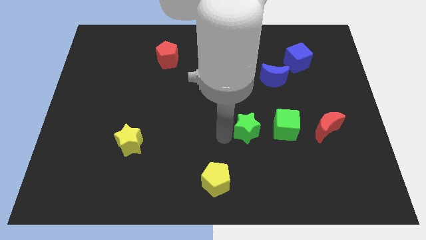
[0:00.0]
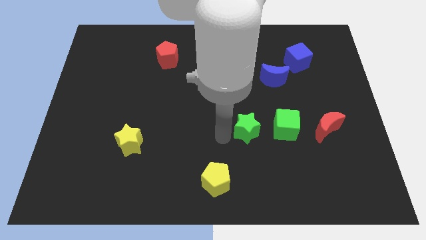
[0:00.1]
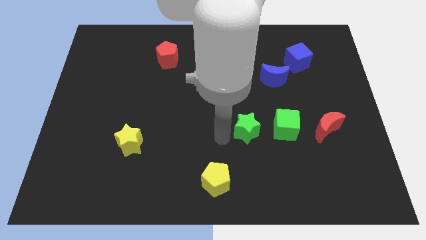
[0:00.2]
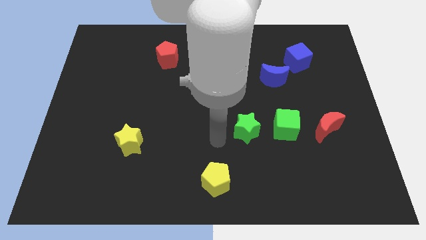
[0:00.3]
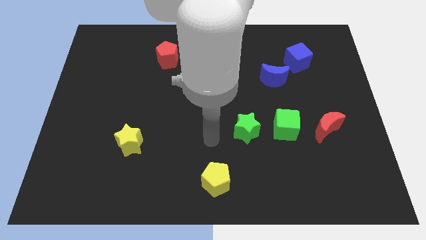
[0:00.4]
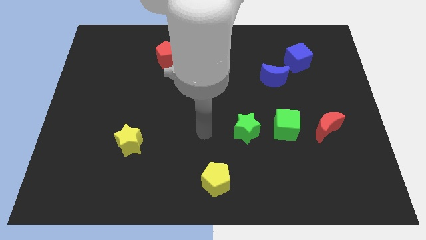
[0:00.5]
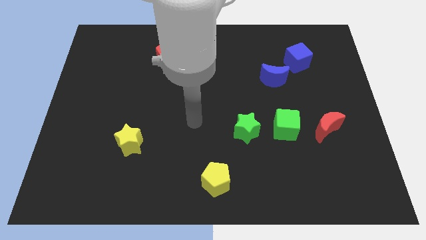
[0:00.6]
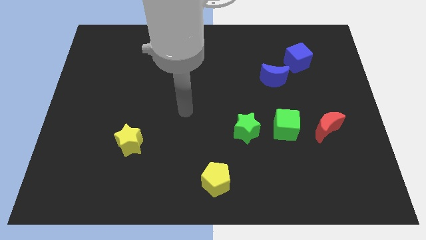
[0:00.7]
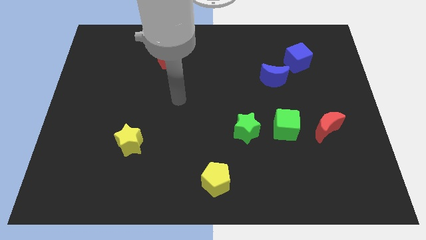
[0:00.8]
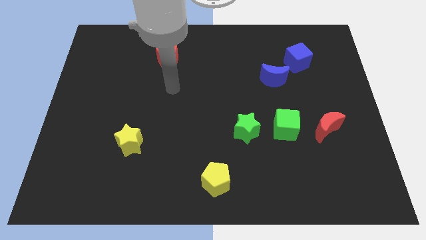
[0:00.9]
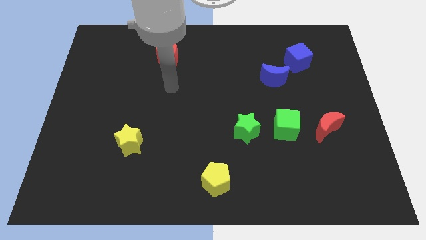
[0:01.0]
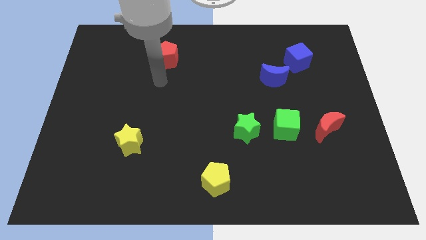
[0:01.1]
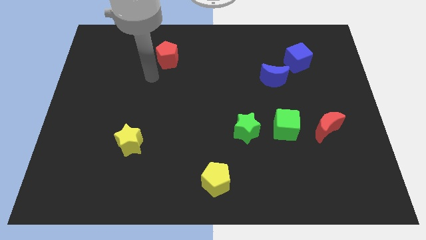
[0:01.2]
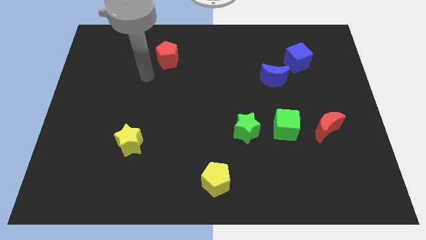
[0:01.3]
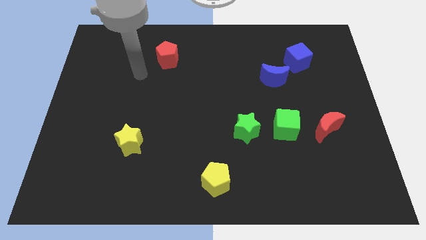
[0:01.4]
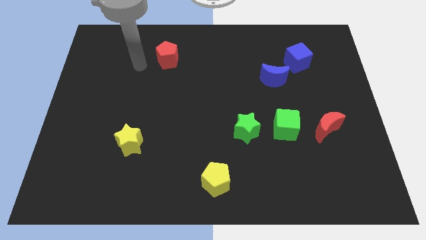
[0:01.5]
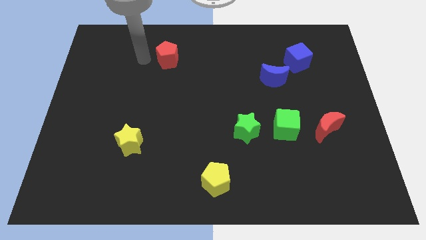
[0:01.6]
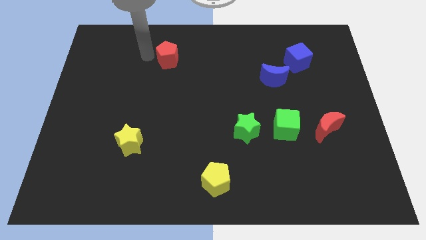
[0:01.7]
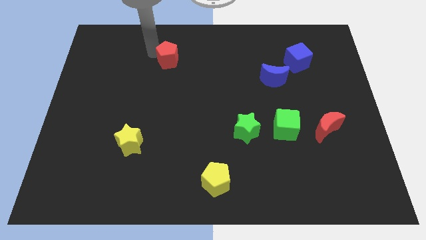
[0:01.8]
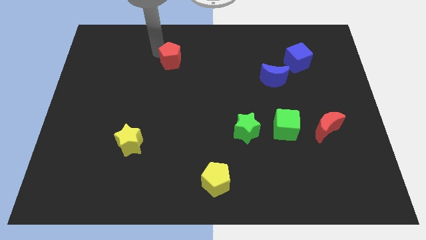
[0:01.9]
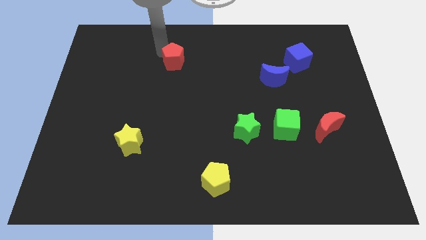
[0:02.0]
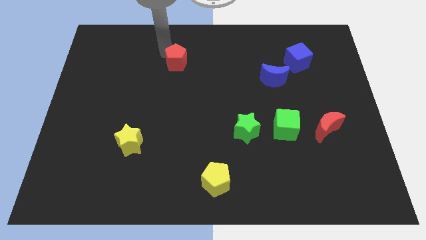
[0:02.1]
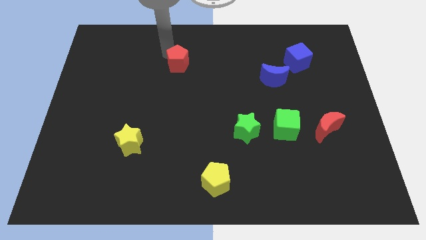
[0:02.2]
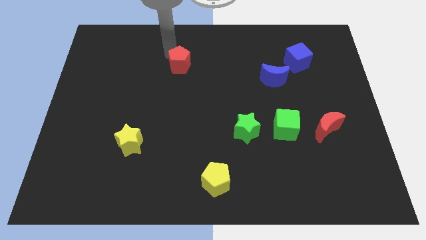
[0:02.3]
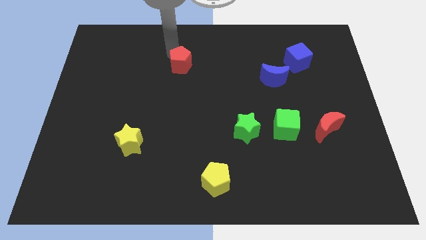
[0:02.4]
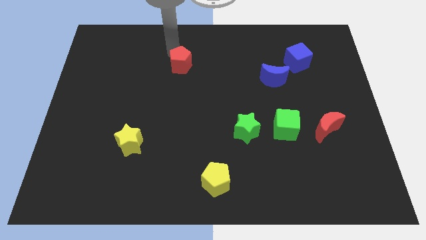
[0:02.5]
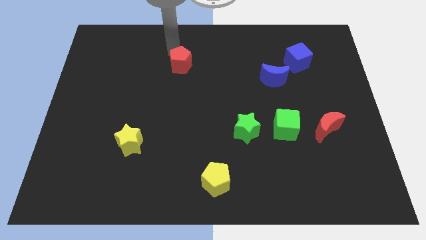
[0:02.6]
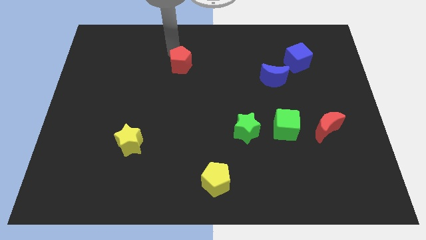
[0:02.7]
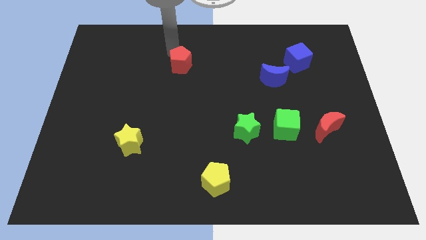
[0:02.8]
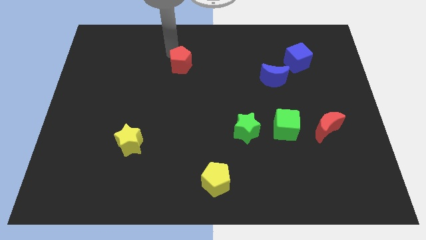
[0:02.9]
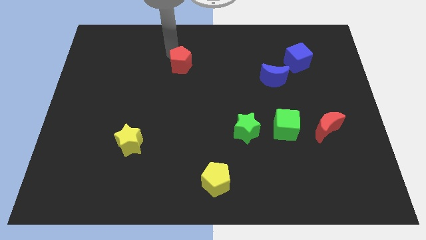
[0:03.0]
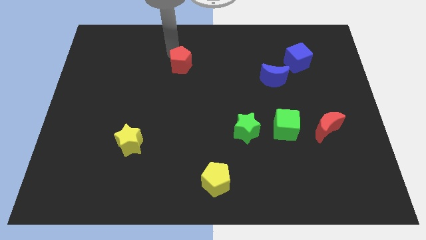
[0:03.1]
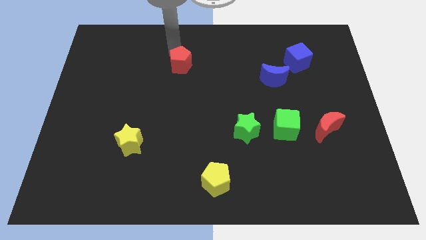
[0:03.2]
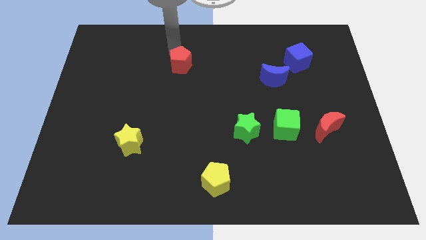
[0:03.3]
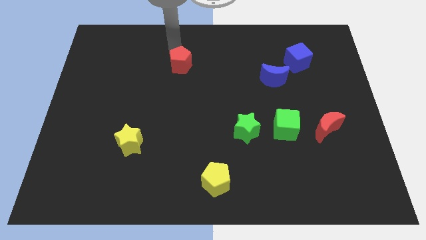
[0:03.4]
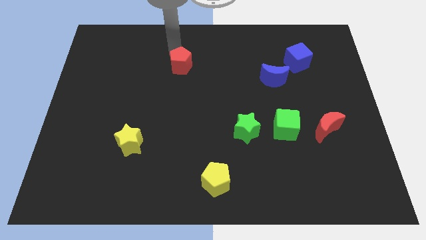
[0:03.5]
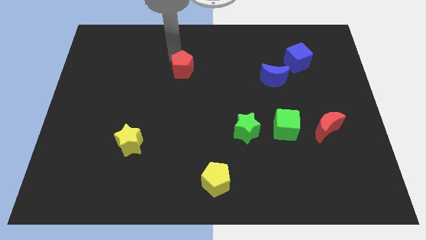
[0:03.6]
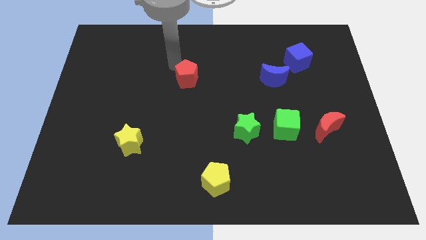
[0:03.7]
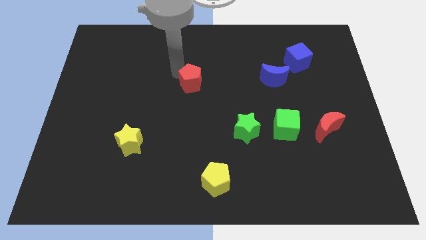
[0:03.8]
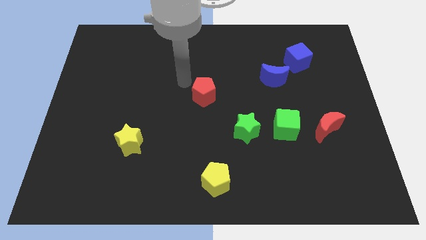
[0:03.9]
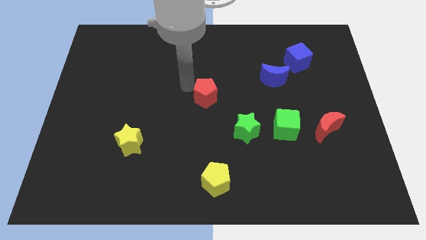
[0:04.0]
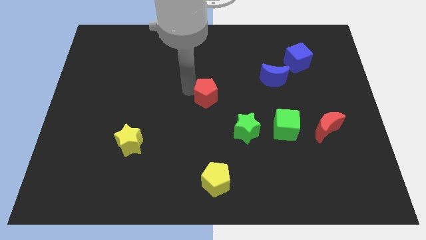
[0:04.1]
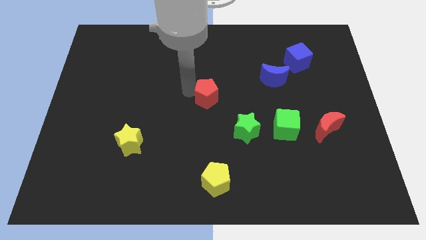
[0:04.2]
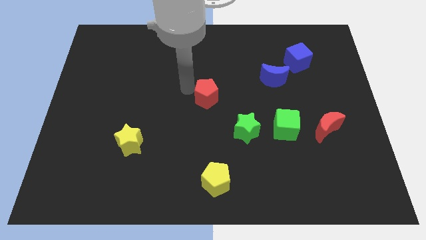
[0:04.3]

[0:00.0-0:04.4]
push the red pentagon to the center of the board

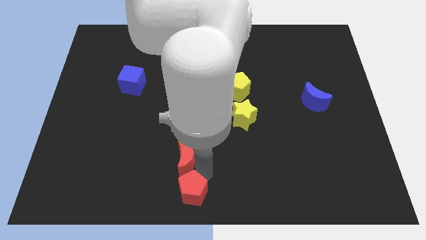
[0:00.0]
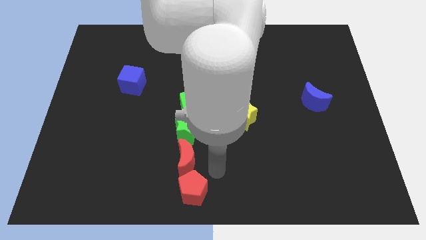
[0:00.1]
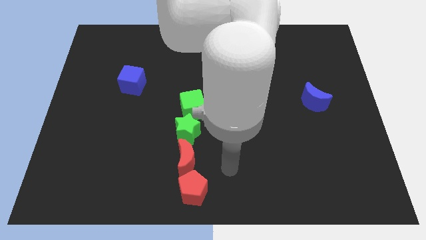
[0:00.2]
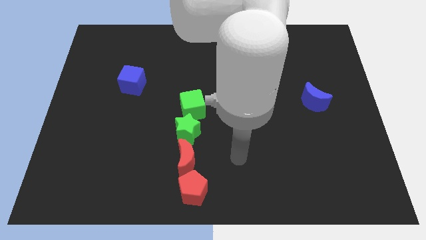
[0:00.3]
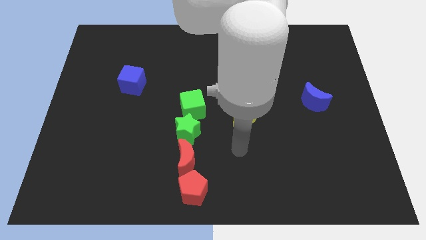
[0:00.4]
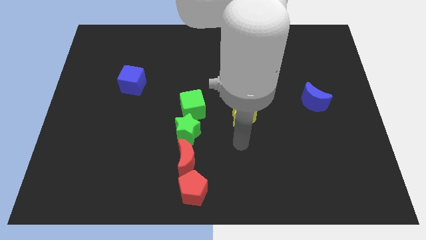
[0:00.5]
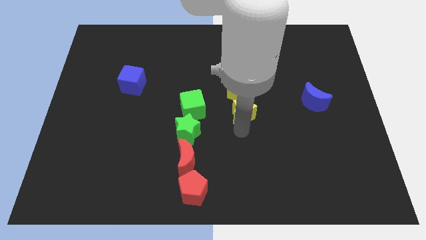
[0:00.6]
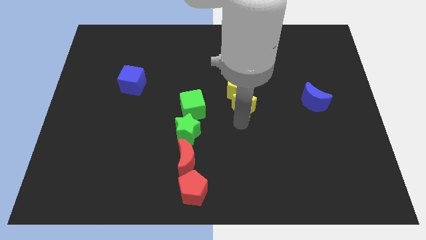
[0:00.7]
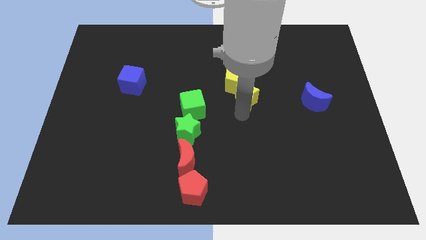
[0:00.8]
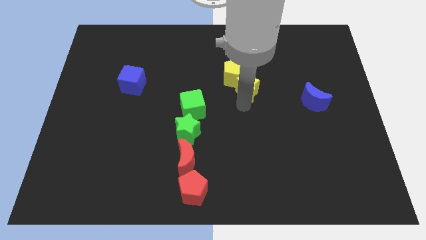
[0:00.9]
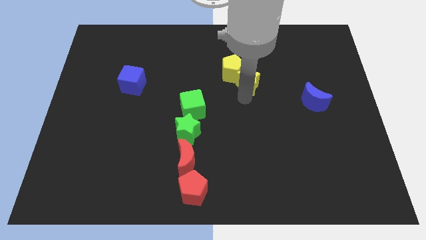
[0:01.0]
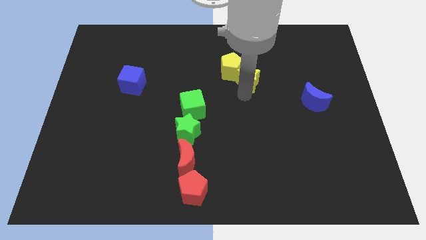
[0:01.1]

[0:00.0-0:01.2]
slide the yellow star into the yellow pentagon

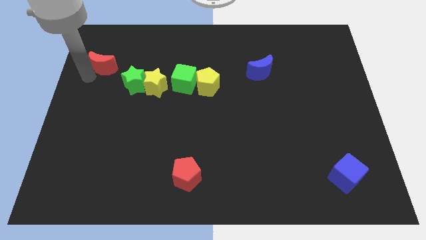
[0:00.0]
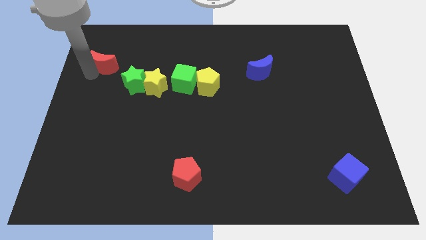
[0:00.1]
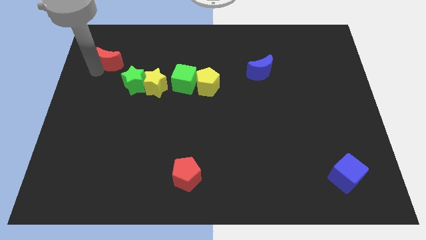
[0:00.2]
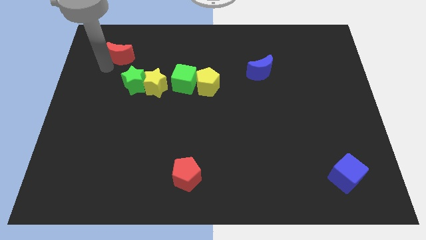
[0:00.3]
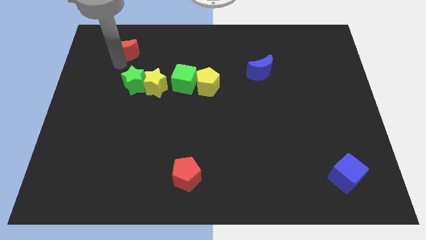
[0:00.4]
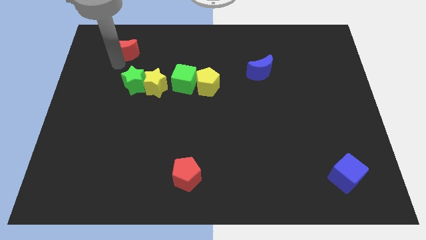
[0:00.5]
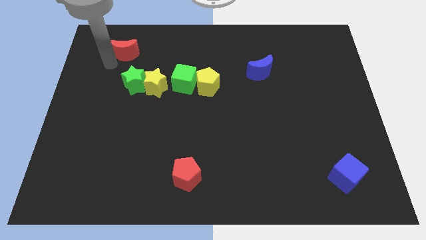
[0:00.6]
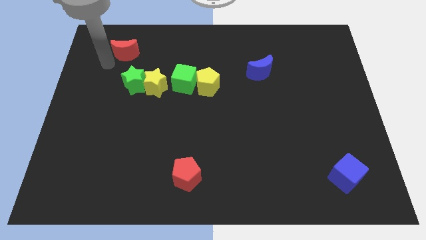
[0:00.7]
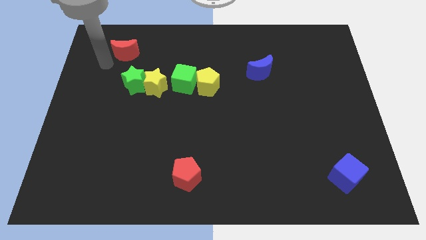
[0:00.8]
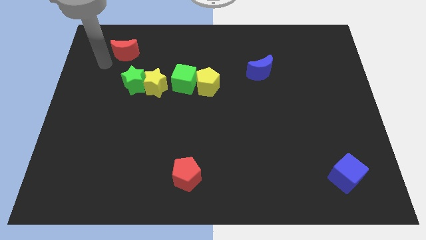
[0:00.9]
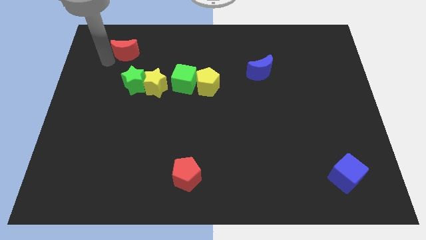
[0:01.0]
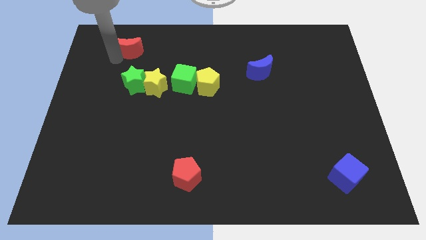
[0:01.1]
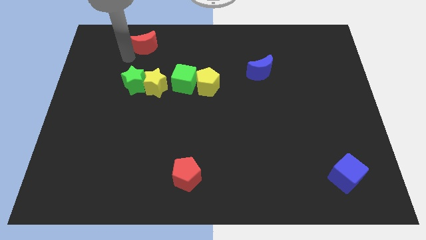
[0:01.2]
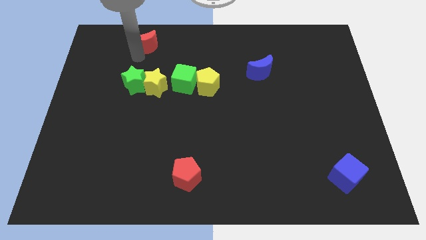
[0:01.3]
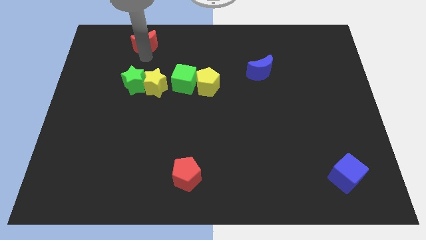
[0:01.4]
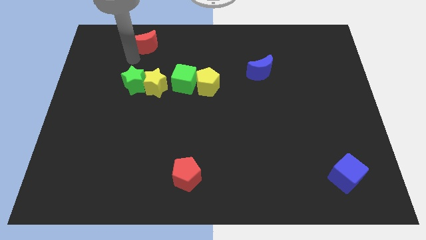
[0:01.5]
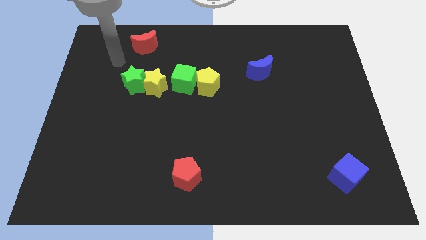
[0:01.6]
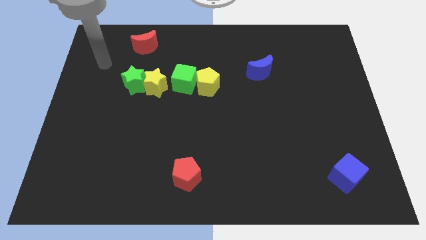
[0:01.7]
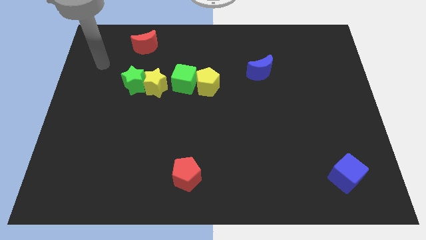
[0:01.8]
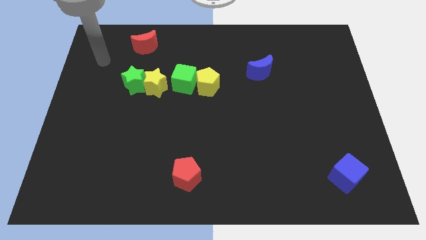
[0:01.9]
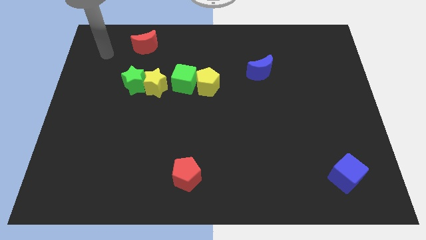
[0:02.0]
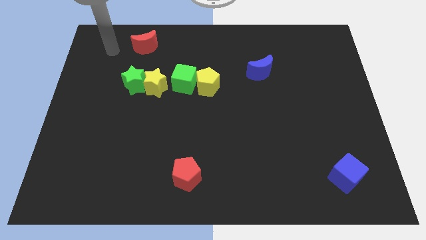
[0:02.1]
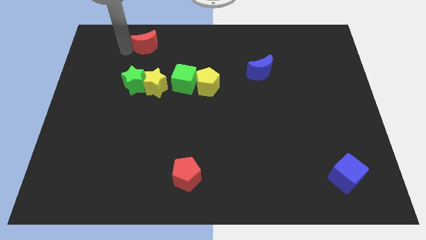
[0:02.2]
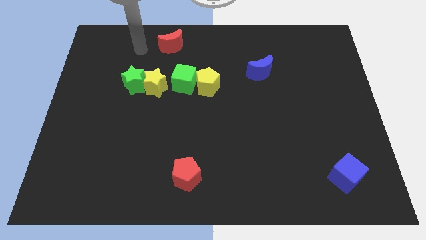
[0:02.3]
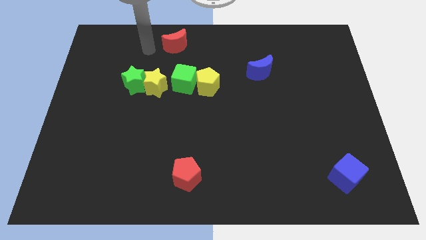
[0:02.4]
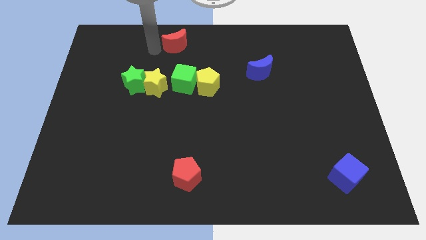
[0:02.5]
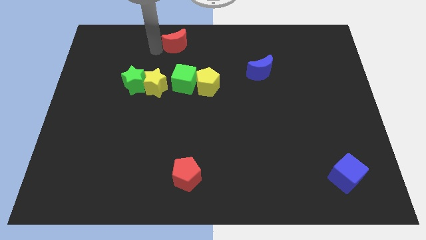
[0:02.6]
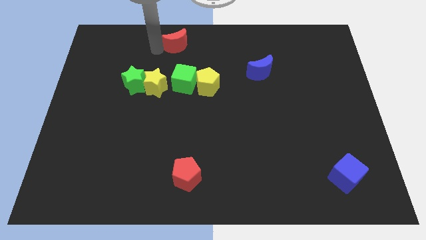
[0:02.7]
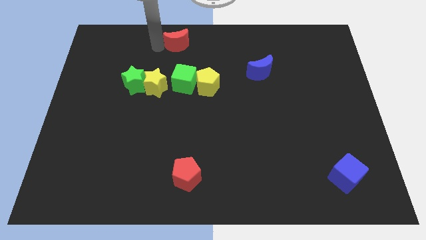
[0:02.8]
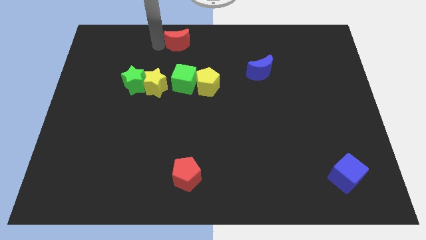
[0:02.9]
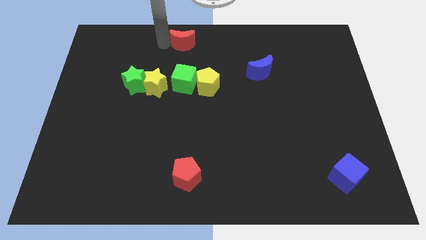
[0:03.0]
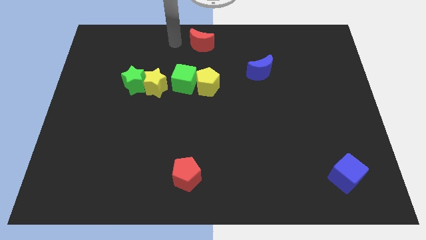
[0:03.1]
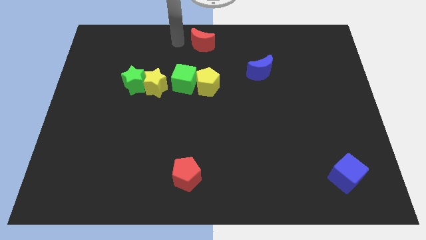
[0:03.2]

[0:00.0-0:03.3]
move red moon to center top
